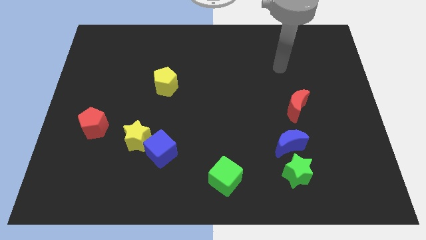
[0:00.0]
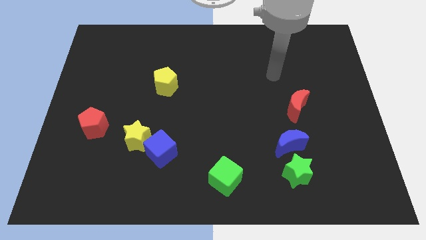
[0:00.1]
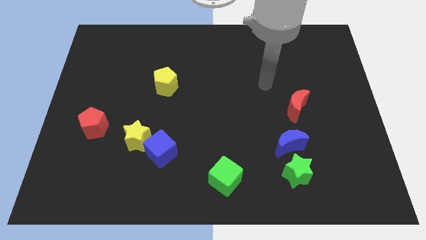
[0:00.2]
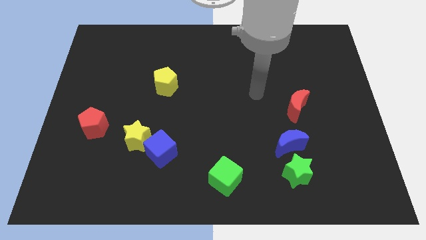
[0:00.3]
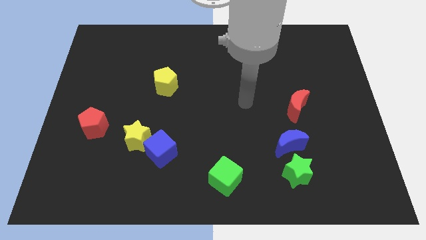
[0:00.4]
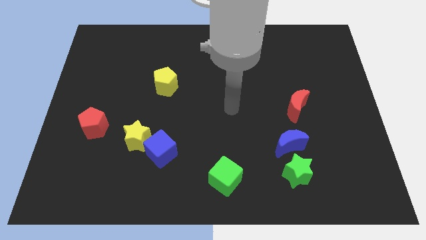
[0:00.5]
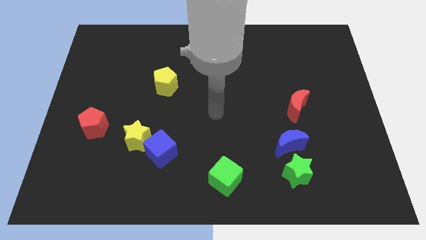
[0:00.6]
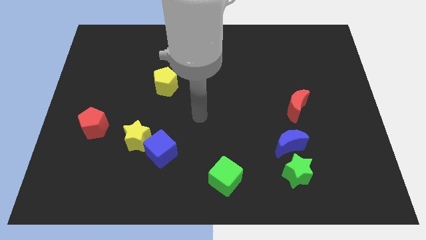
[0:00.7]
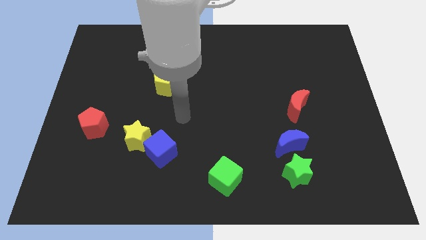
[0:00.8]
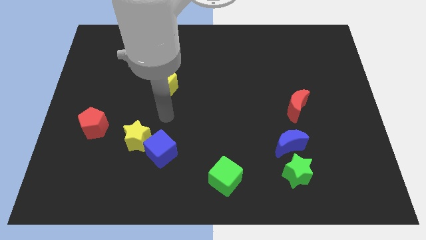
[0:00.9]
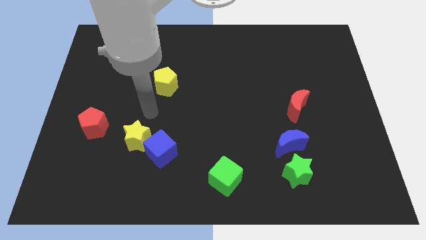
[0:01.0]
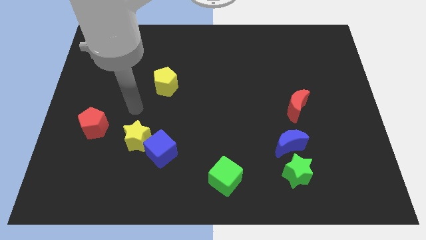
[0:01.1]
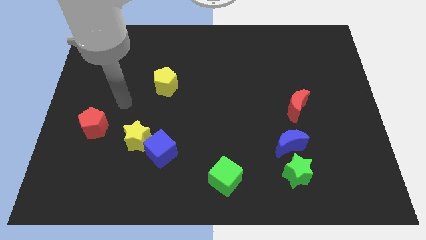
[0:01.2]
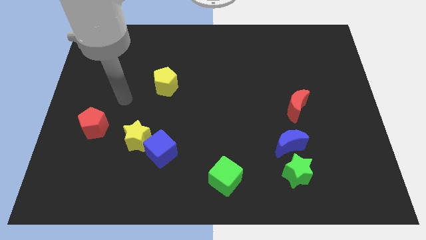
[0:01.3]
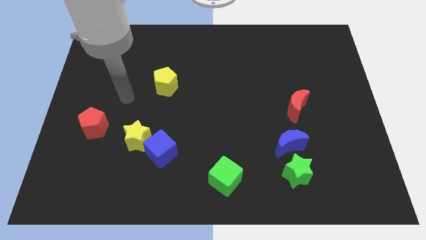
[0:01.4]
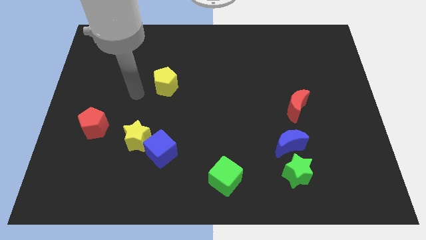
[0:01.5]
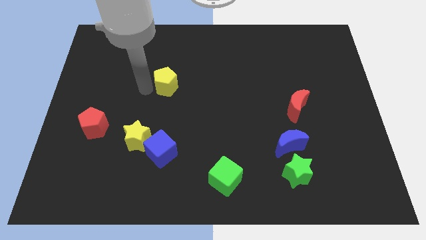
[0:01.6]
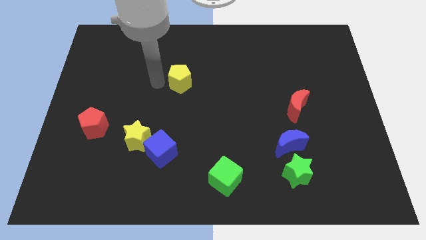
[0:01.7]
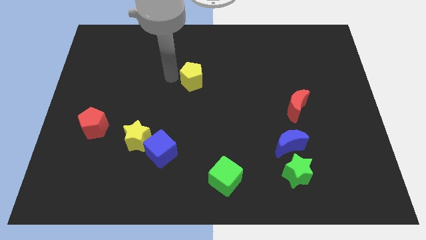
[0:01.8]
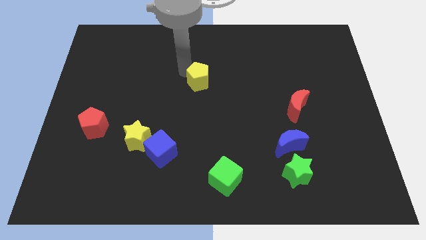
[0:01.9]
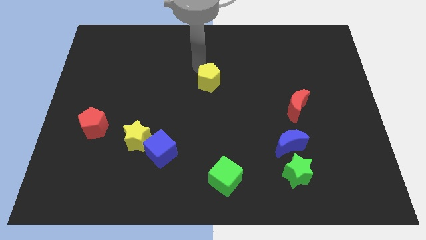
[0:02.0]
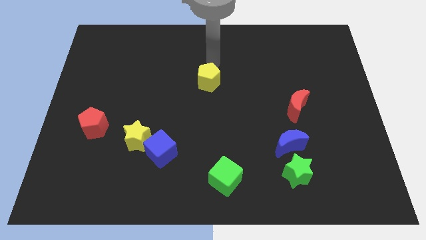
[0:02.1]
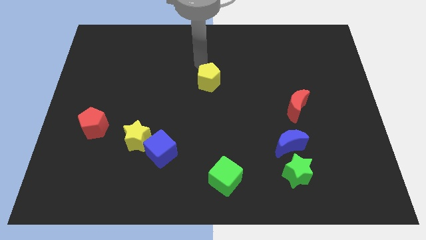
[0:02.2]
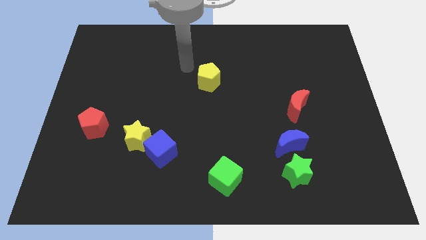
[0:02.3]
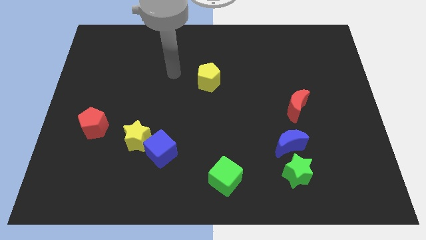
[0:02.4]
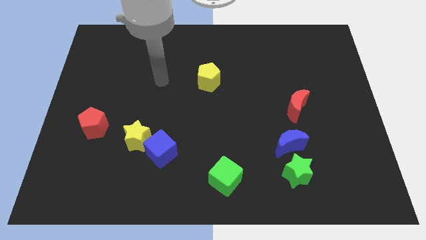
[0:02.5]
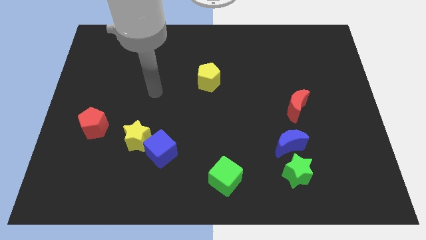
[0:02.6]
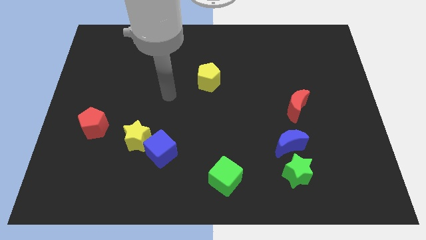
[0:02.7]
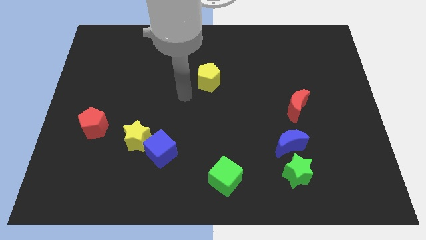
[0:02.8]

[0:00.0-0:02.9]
move yellow pentagon towards center of the board

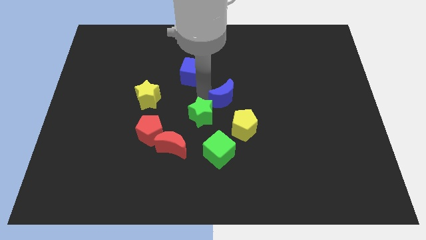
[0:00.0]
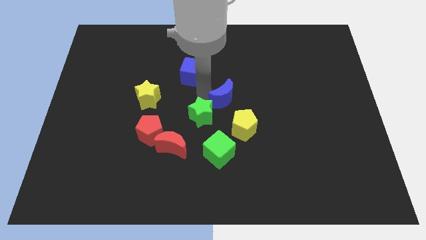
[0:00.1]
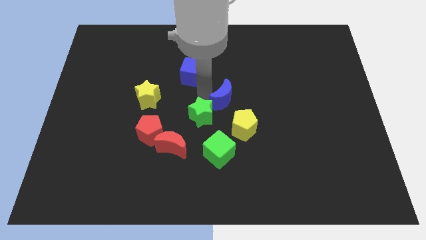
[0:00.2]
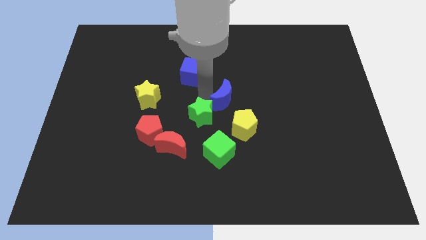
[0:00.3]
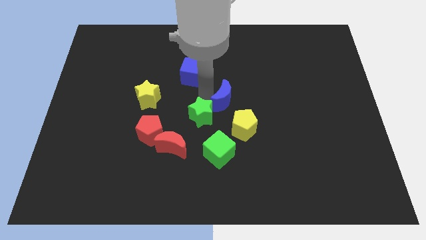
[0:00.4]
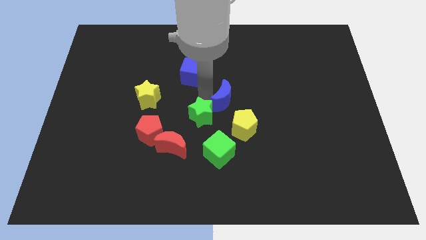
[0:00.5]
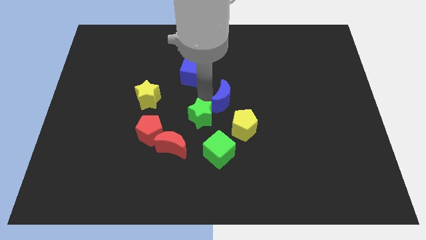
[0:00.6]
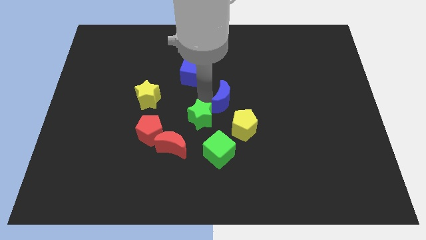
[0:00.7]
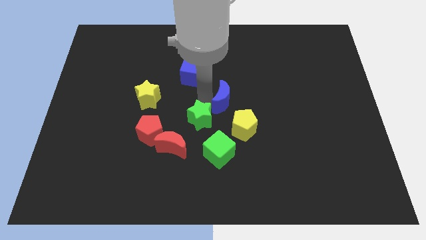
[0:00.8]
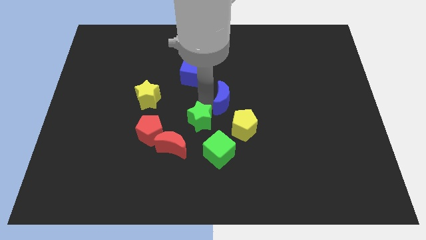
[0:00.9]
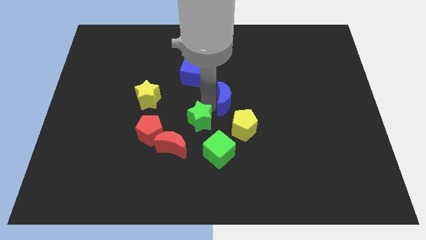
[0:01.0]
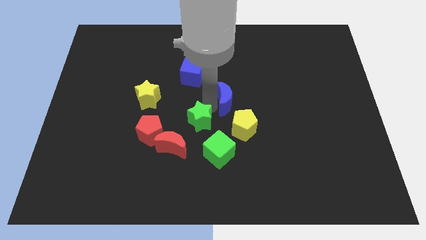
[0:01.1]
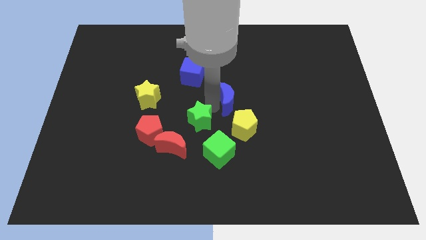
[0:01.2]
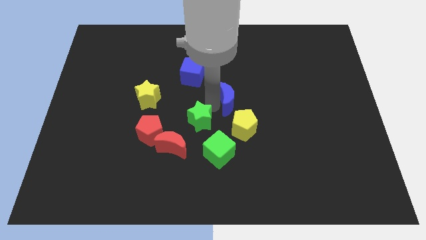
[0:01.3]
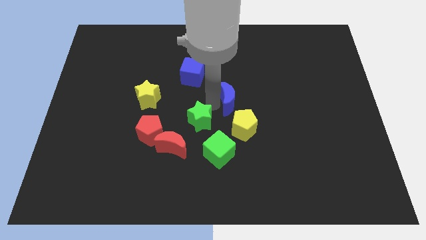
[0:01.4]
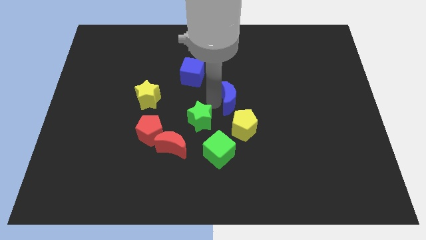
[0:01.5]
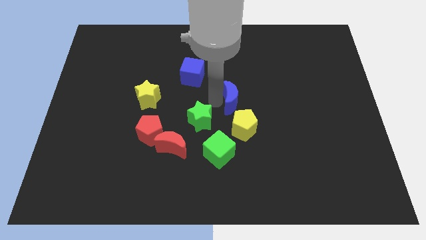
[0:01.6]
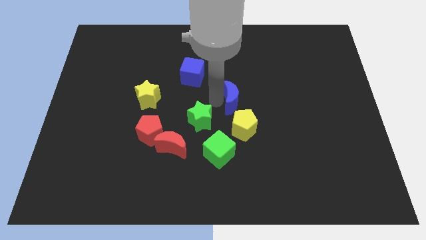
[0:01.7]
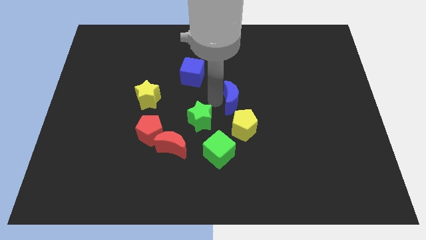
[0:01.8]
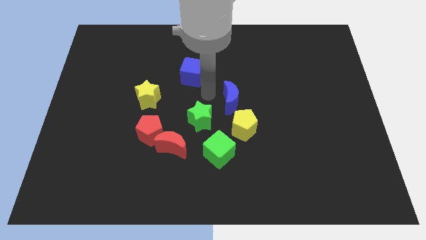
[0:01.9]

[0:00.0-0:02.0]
separate the green star and the blue crescent

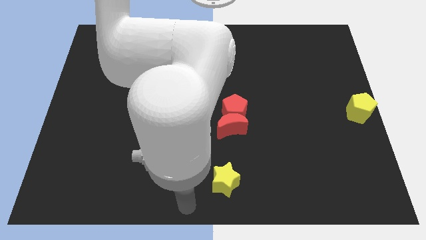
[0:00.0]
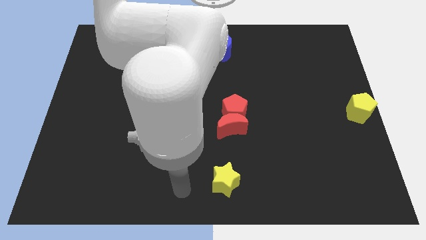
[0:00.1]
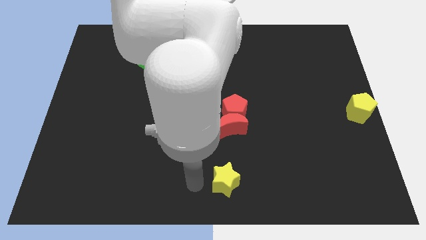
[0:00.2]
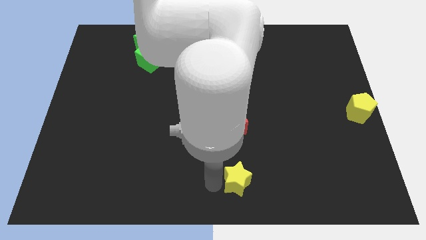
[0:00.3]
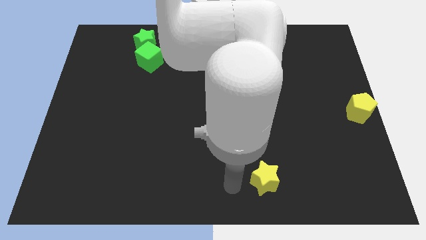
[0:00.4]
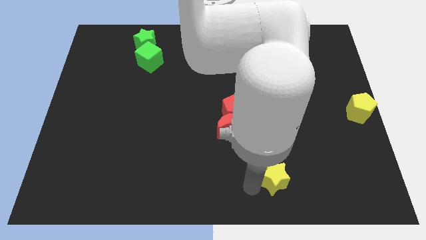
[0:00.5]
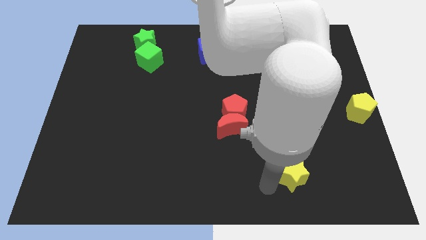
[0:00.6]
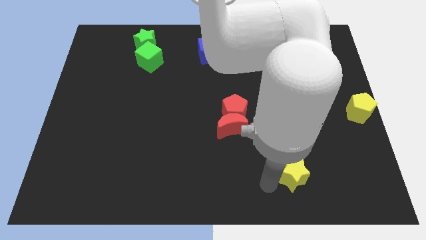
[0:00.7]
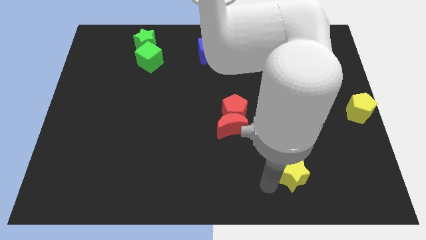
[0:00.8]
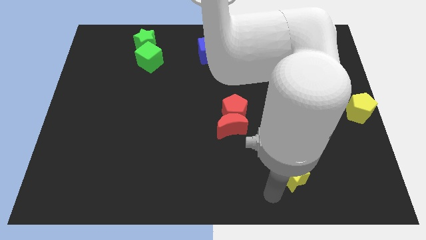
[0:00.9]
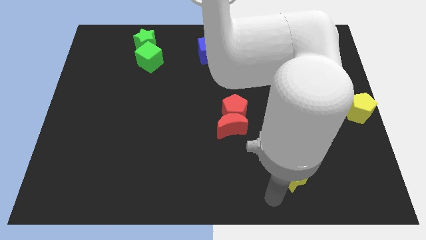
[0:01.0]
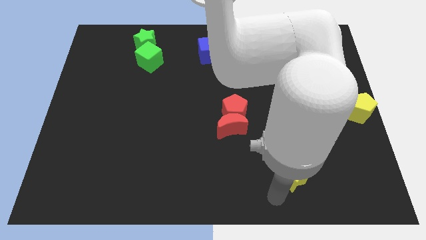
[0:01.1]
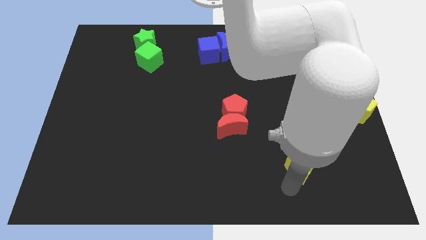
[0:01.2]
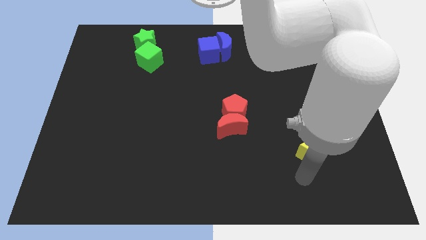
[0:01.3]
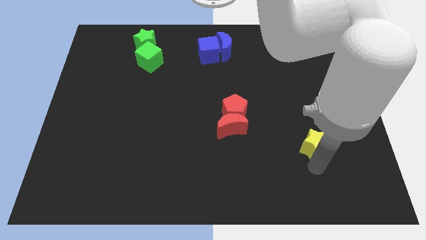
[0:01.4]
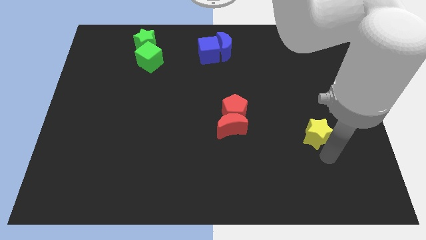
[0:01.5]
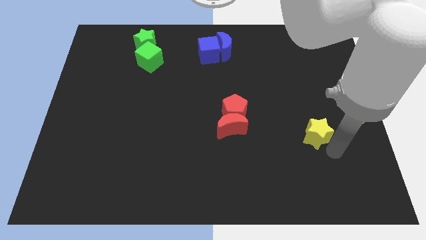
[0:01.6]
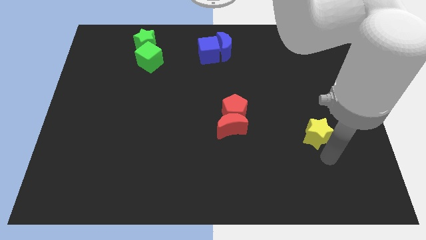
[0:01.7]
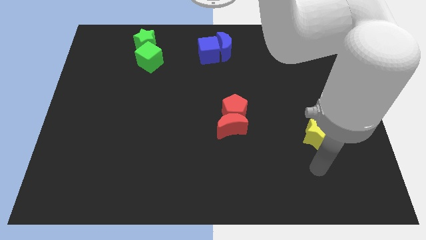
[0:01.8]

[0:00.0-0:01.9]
move the yellow star to the bottom center

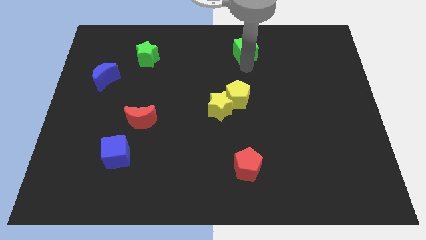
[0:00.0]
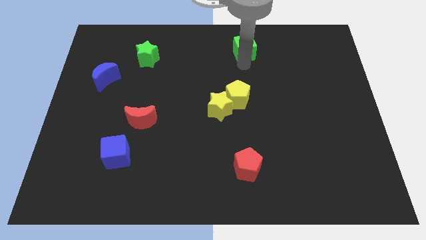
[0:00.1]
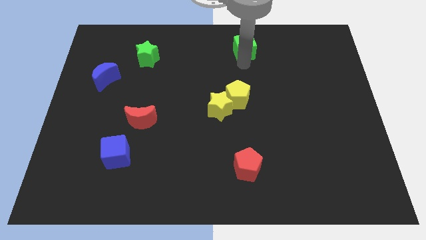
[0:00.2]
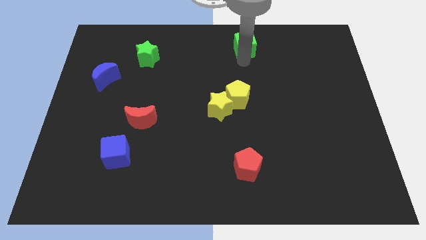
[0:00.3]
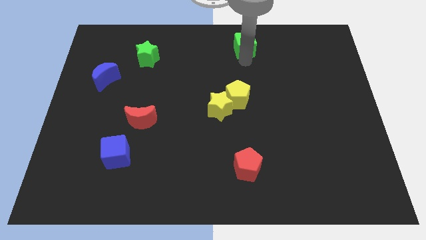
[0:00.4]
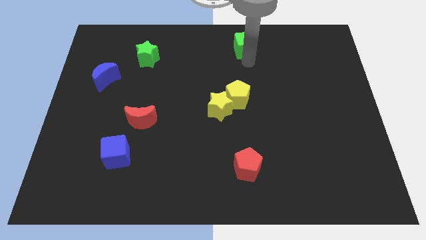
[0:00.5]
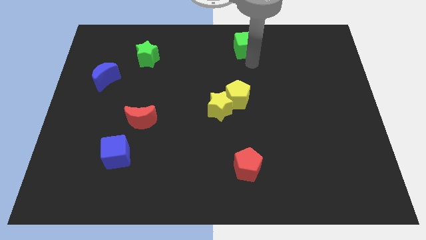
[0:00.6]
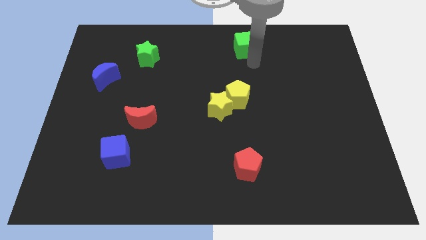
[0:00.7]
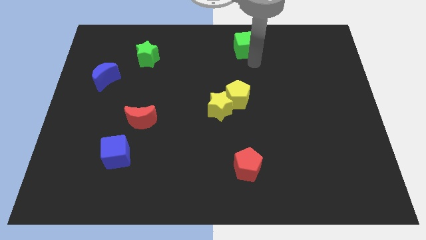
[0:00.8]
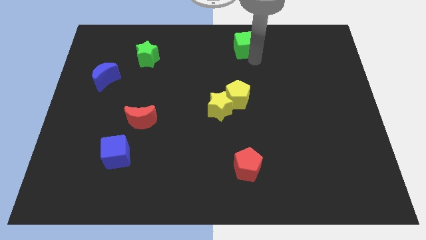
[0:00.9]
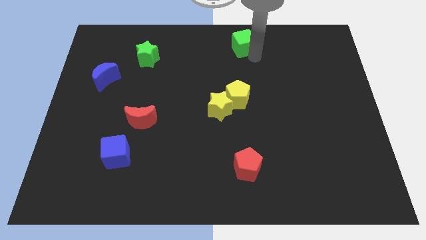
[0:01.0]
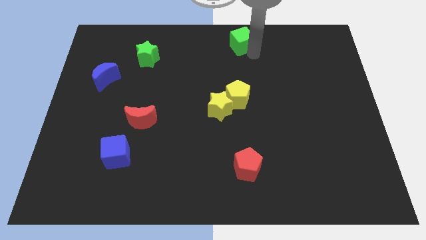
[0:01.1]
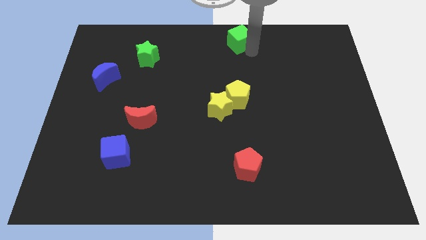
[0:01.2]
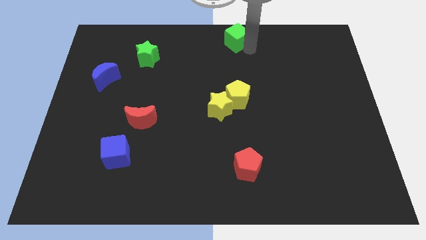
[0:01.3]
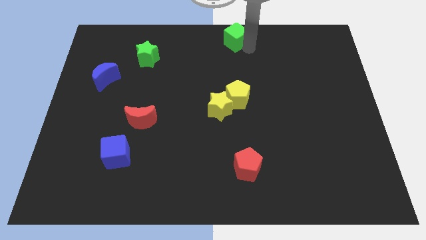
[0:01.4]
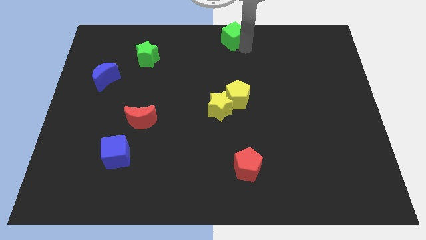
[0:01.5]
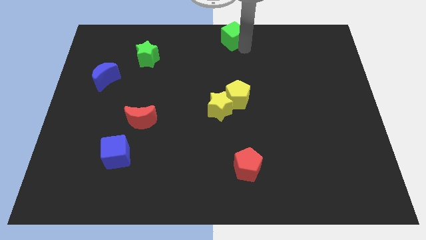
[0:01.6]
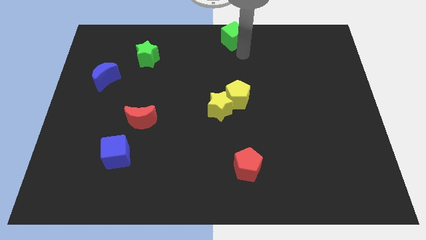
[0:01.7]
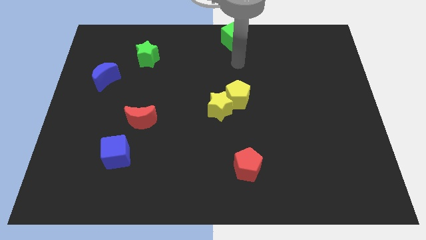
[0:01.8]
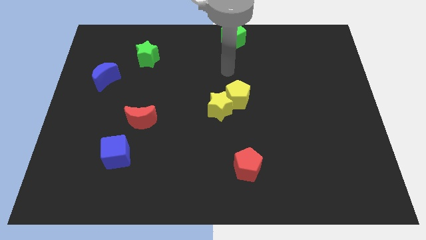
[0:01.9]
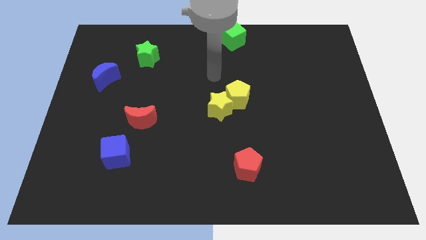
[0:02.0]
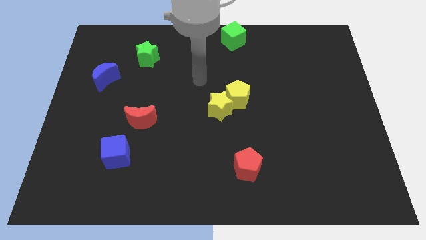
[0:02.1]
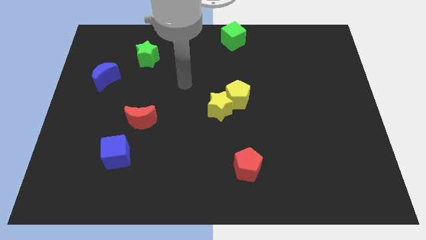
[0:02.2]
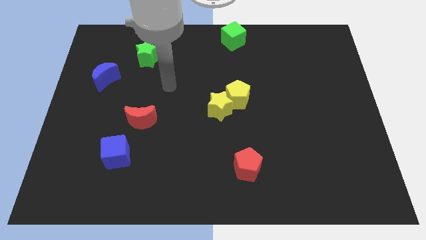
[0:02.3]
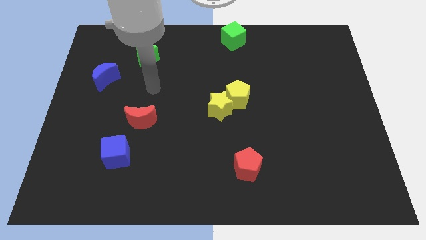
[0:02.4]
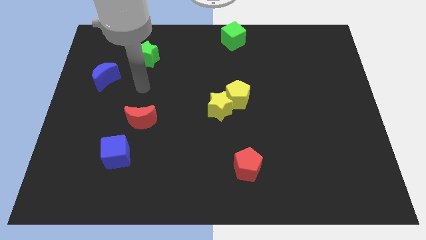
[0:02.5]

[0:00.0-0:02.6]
move the green cube to the top center
